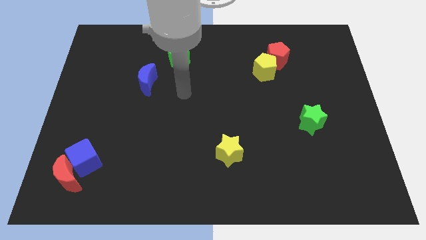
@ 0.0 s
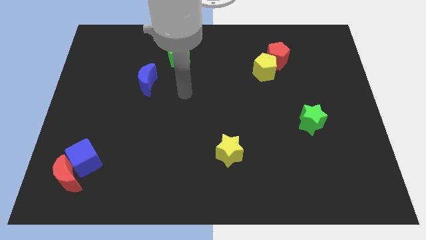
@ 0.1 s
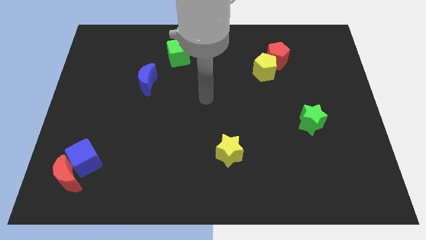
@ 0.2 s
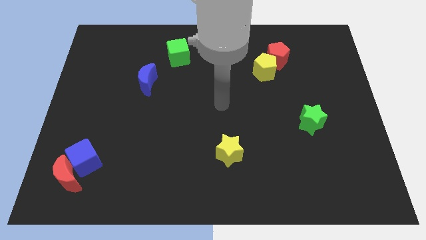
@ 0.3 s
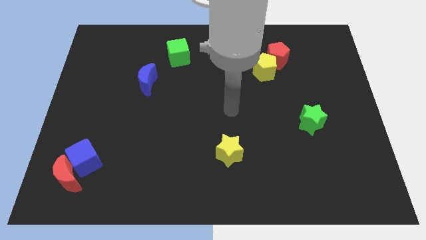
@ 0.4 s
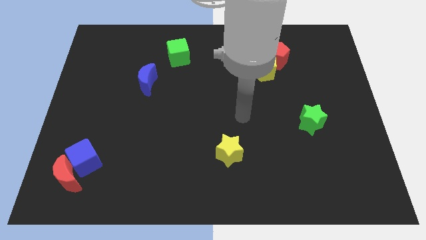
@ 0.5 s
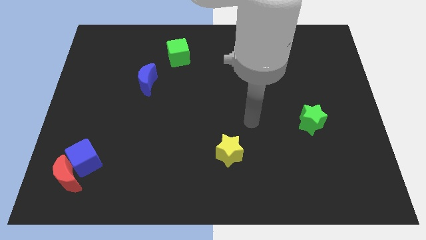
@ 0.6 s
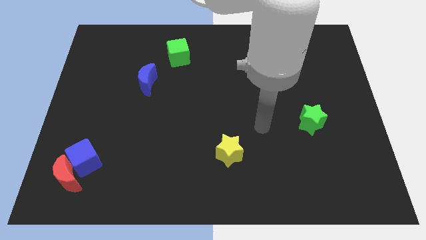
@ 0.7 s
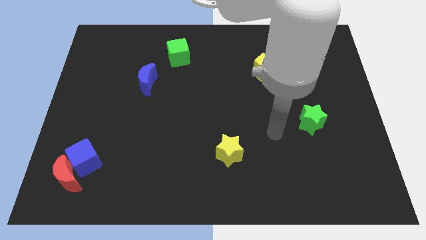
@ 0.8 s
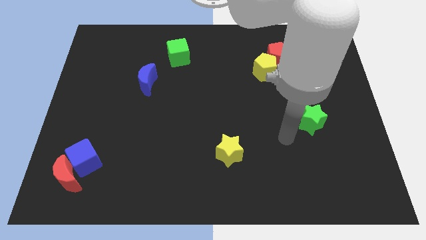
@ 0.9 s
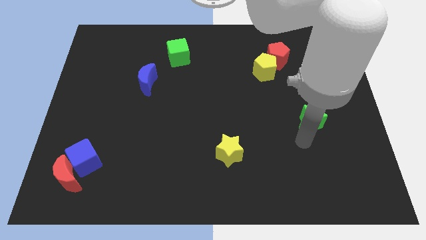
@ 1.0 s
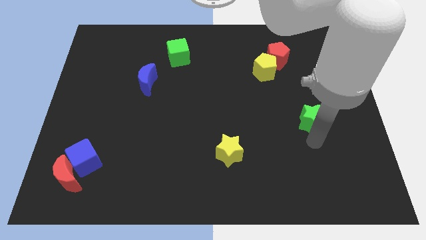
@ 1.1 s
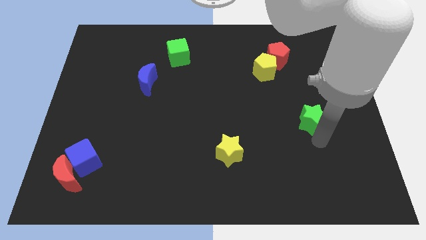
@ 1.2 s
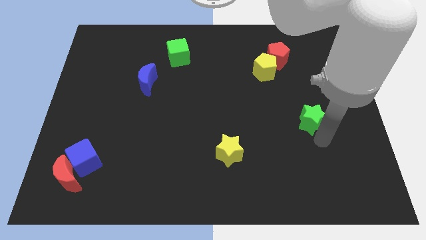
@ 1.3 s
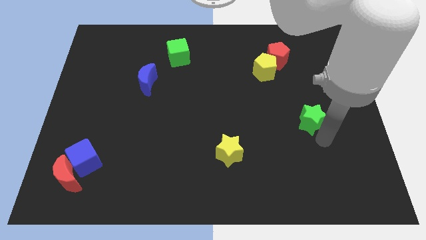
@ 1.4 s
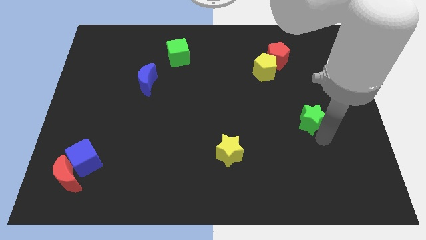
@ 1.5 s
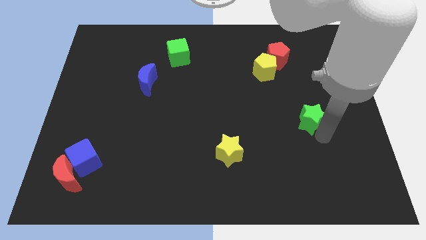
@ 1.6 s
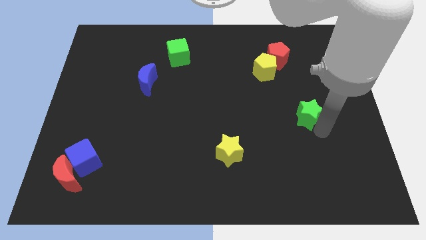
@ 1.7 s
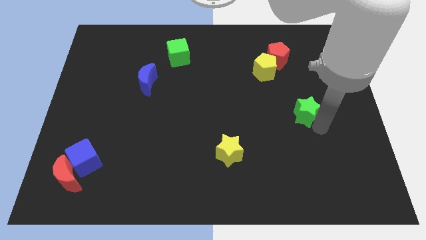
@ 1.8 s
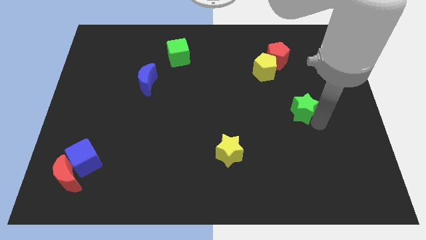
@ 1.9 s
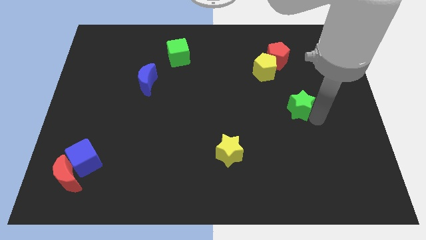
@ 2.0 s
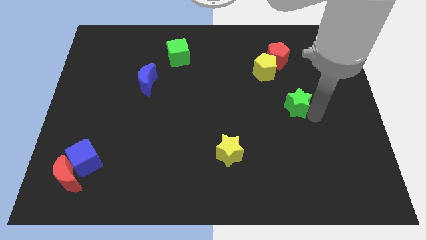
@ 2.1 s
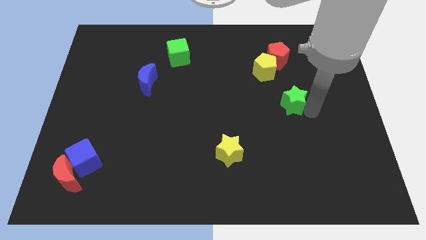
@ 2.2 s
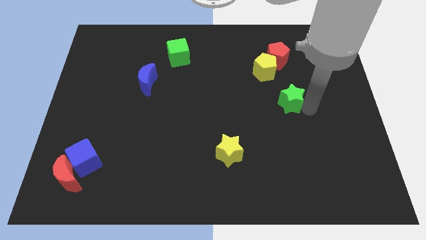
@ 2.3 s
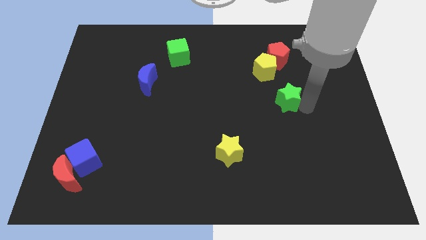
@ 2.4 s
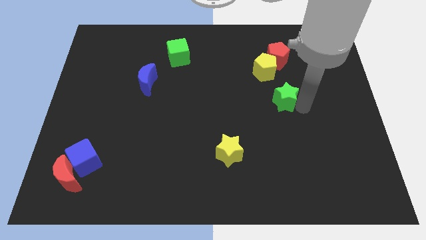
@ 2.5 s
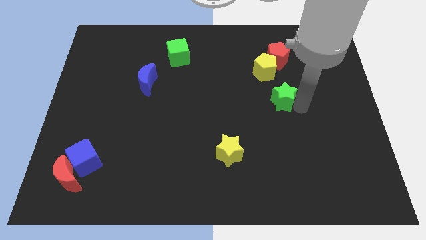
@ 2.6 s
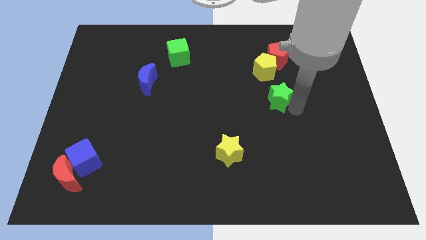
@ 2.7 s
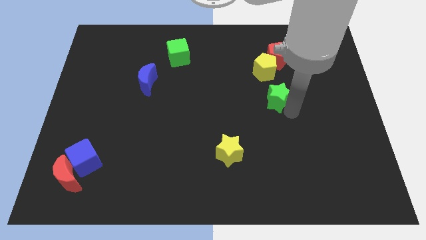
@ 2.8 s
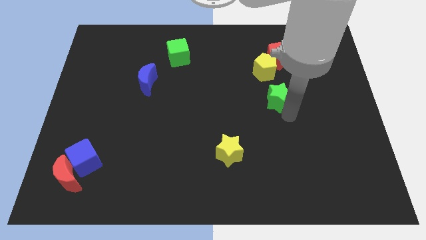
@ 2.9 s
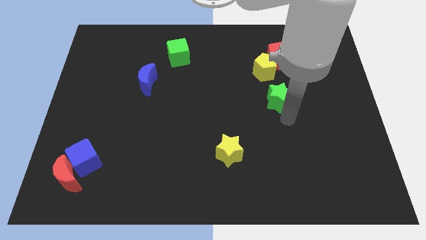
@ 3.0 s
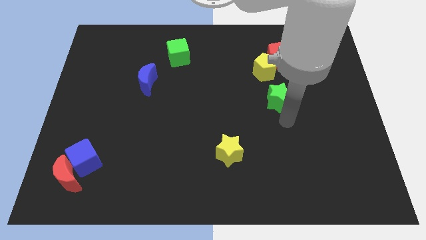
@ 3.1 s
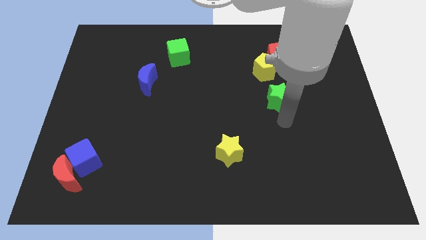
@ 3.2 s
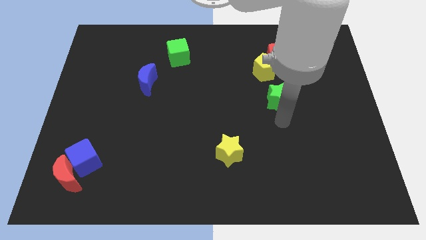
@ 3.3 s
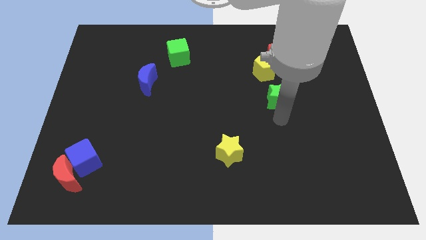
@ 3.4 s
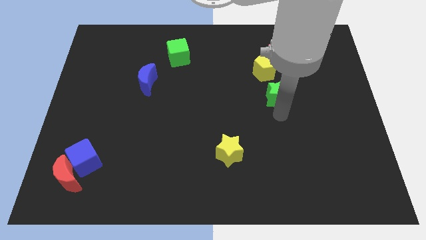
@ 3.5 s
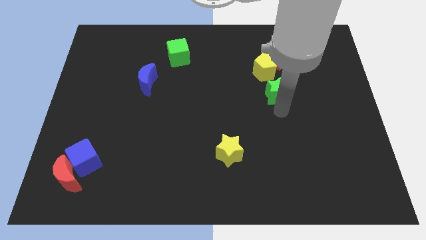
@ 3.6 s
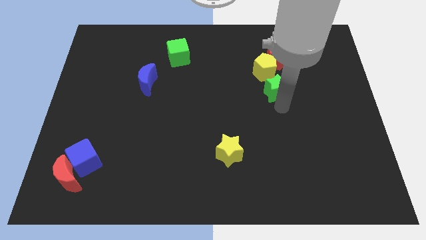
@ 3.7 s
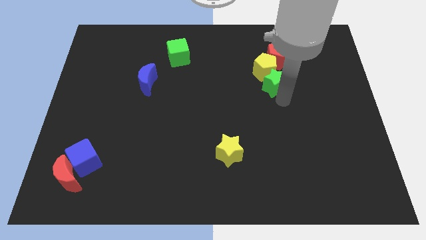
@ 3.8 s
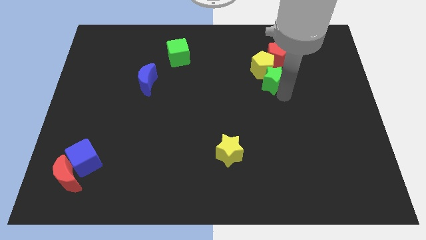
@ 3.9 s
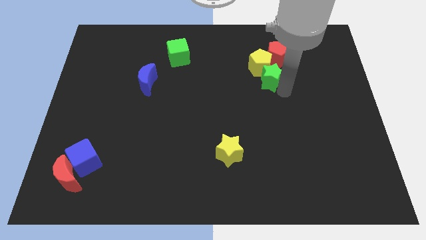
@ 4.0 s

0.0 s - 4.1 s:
slide the green star towards the yellow pentagon

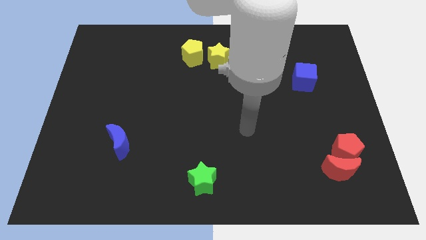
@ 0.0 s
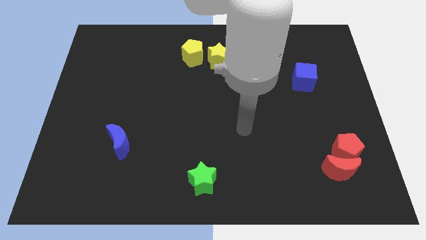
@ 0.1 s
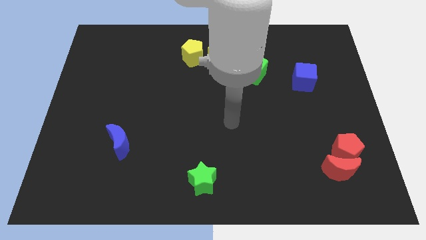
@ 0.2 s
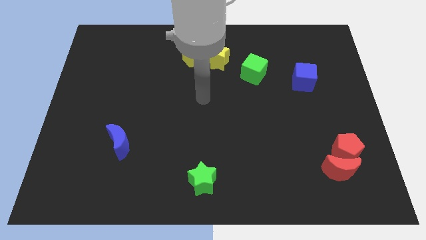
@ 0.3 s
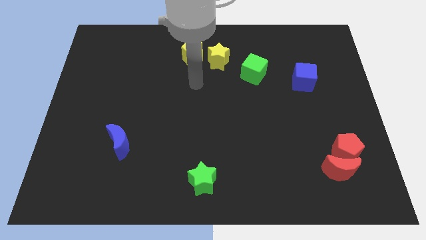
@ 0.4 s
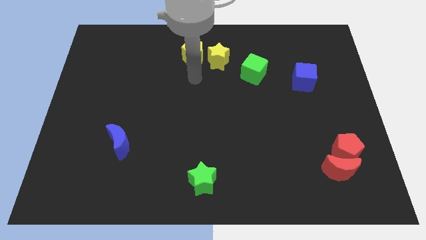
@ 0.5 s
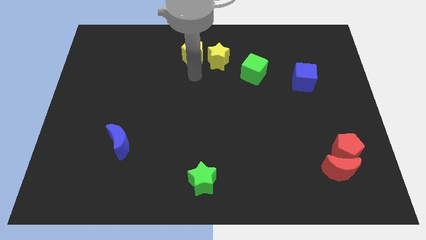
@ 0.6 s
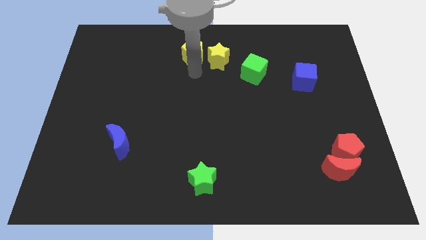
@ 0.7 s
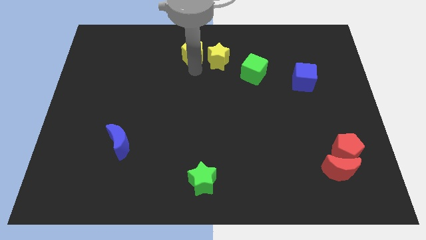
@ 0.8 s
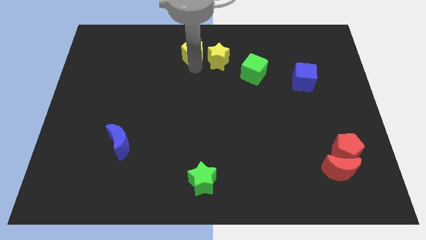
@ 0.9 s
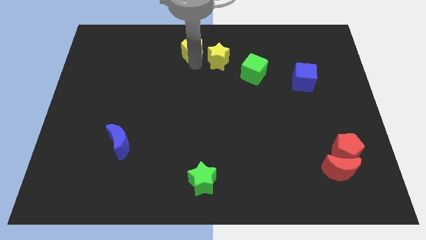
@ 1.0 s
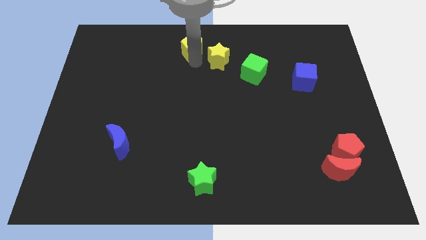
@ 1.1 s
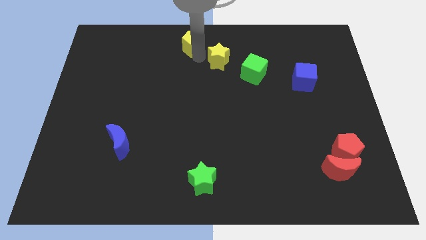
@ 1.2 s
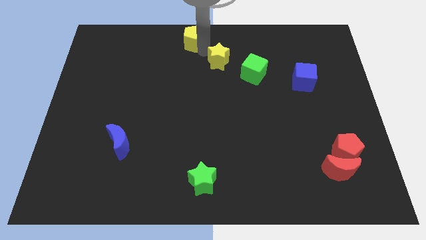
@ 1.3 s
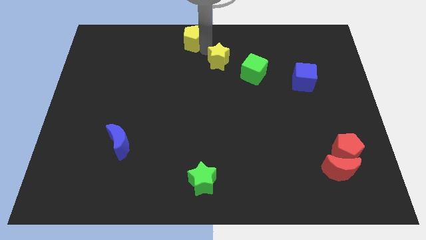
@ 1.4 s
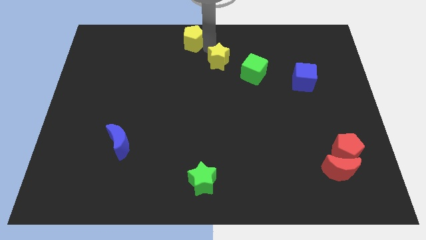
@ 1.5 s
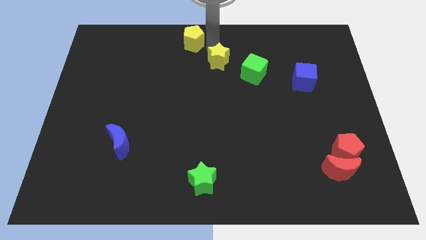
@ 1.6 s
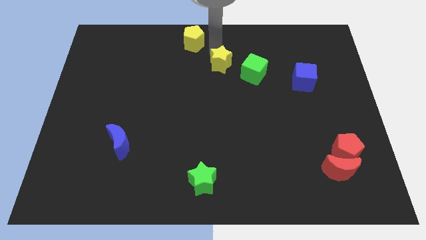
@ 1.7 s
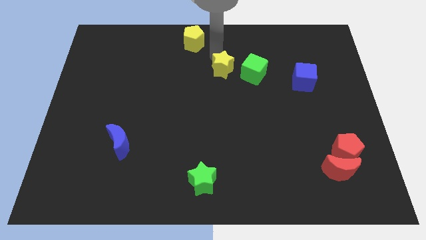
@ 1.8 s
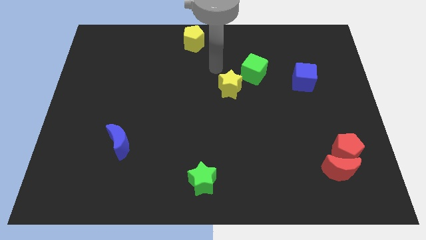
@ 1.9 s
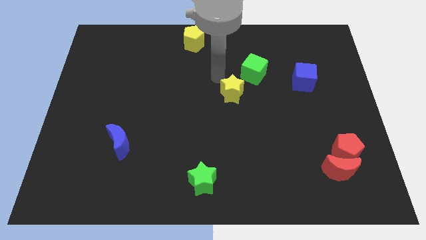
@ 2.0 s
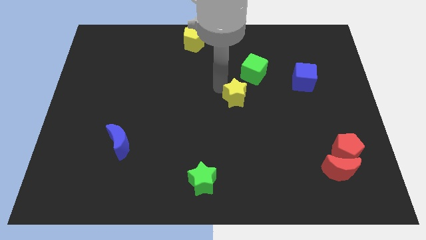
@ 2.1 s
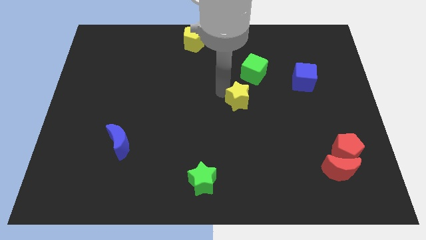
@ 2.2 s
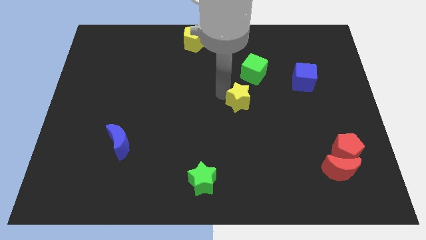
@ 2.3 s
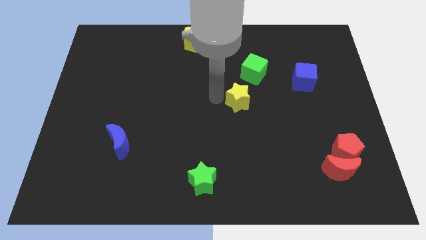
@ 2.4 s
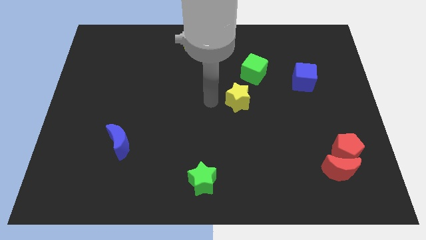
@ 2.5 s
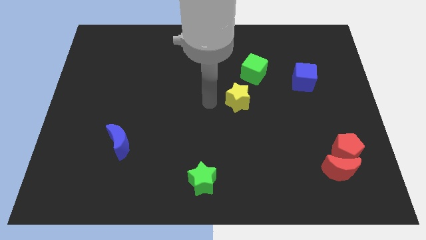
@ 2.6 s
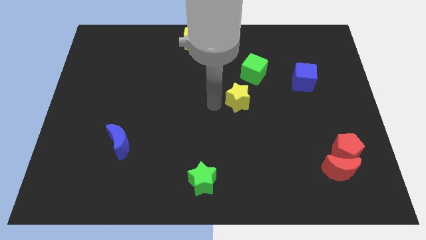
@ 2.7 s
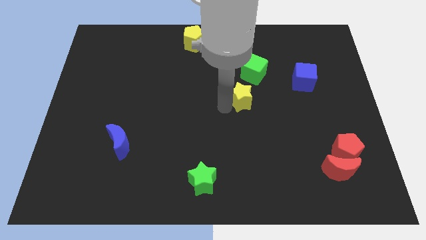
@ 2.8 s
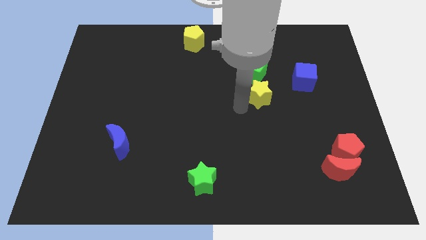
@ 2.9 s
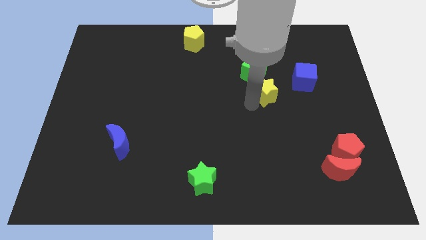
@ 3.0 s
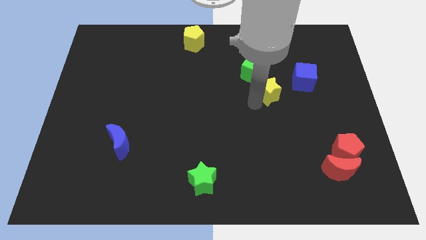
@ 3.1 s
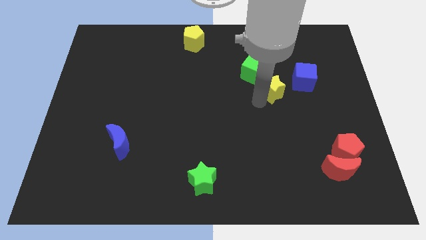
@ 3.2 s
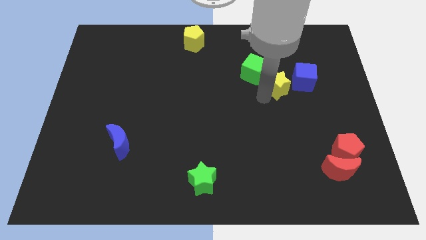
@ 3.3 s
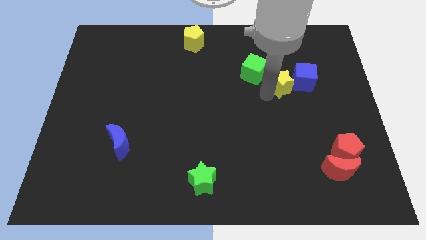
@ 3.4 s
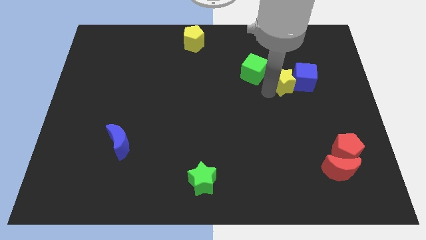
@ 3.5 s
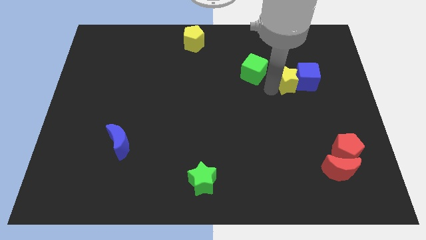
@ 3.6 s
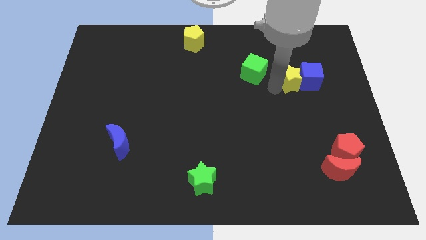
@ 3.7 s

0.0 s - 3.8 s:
push the yellow star next to the blue cube

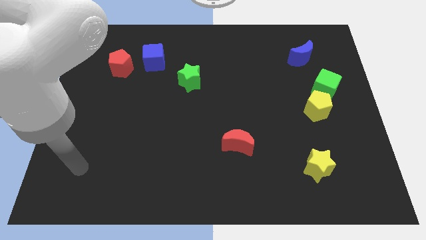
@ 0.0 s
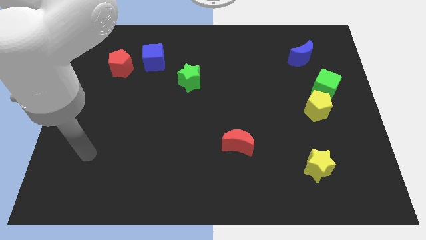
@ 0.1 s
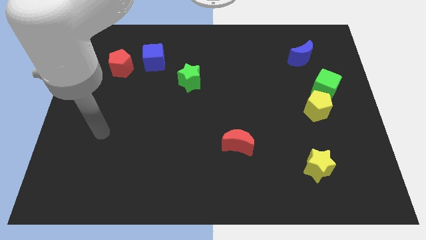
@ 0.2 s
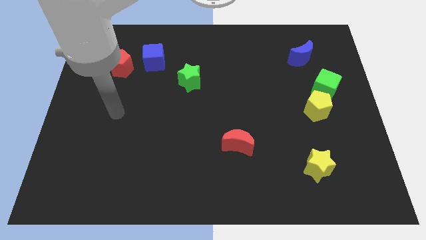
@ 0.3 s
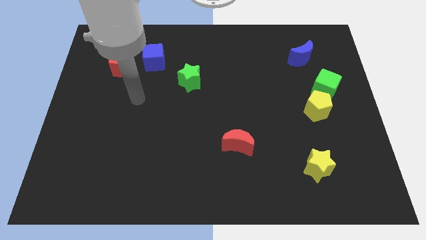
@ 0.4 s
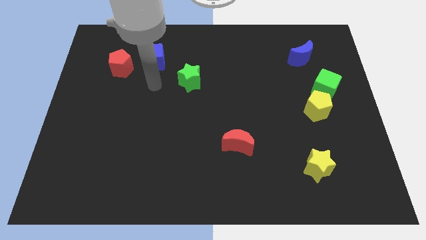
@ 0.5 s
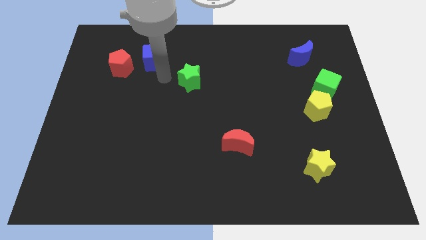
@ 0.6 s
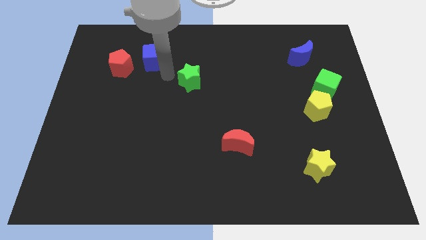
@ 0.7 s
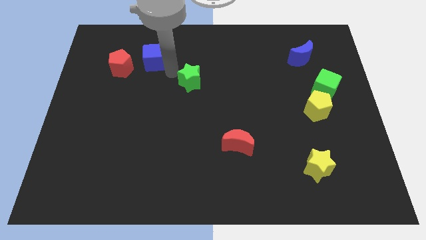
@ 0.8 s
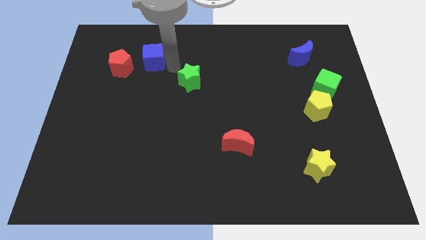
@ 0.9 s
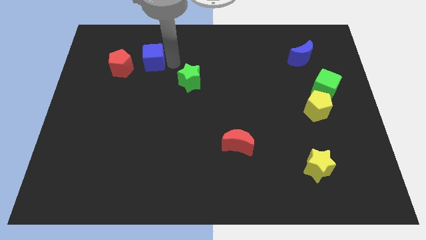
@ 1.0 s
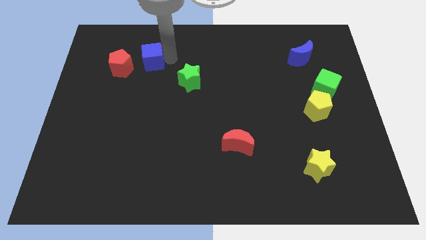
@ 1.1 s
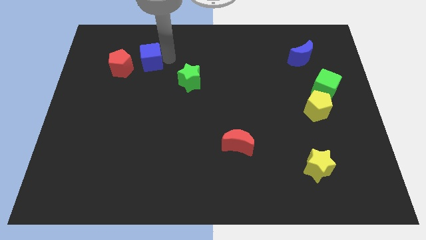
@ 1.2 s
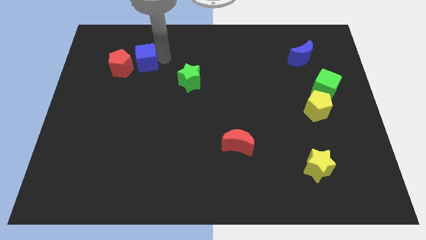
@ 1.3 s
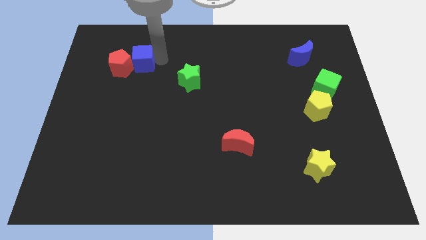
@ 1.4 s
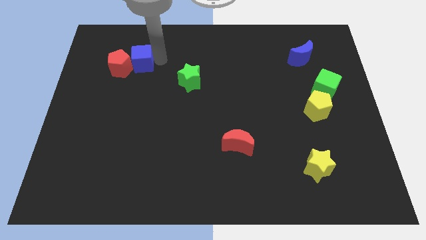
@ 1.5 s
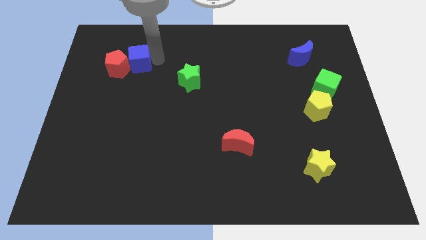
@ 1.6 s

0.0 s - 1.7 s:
put the blue cube towards the red pentagon
